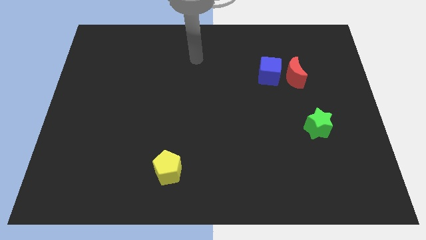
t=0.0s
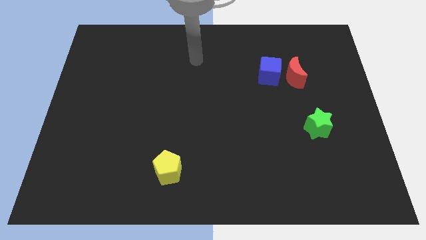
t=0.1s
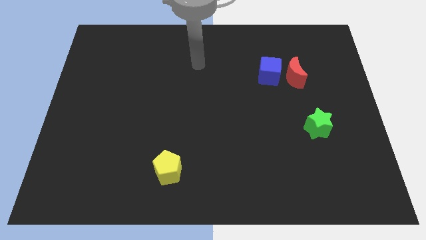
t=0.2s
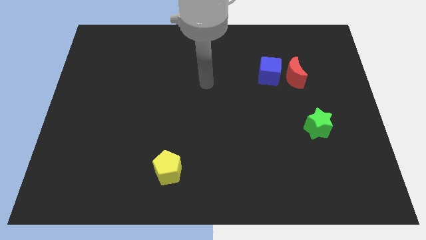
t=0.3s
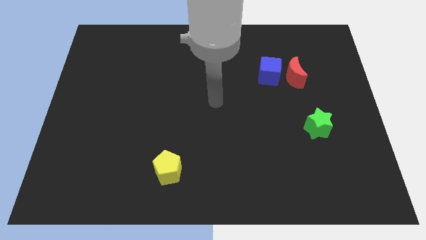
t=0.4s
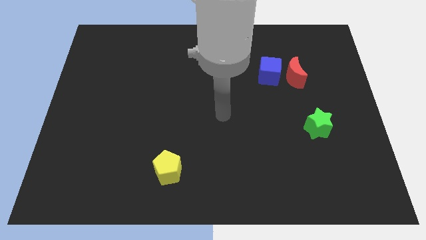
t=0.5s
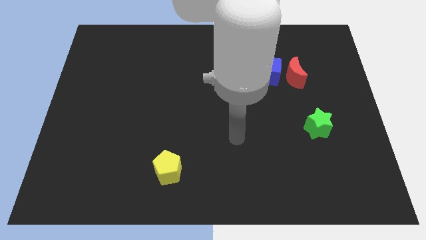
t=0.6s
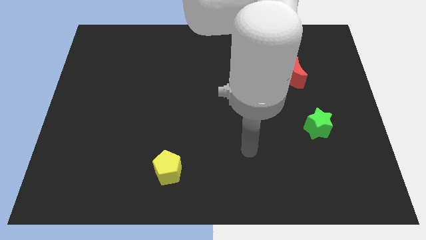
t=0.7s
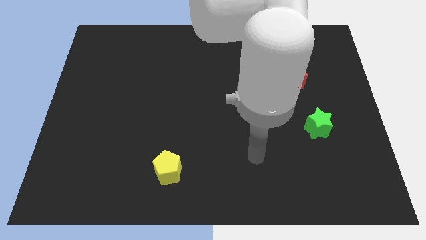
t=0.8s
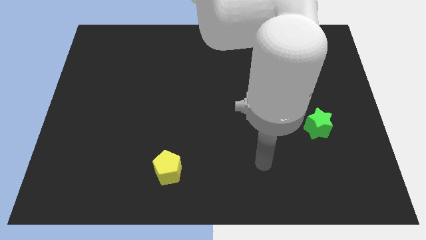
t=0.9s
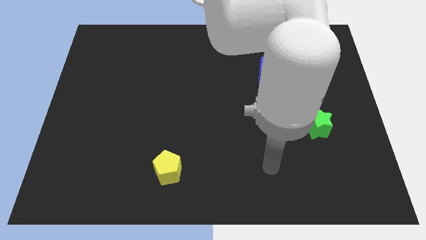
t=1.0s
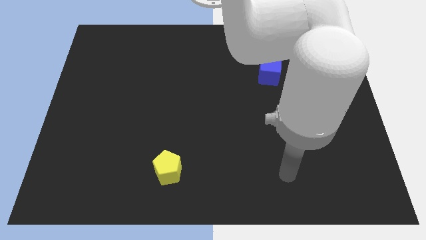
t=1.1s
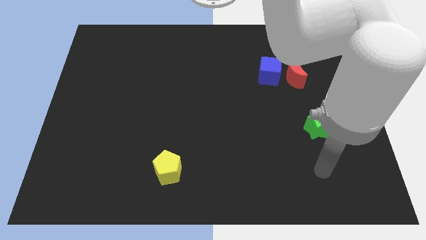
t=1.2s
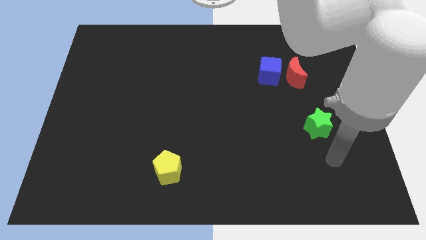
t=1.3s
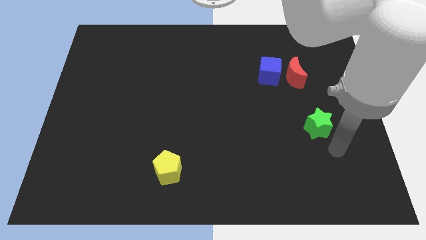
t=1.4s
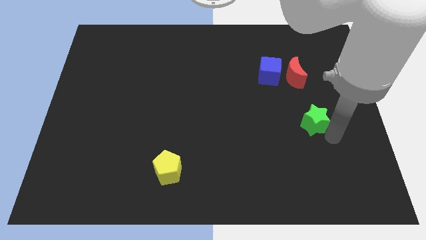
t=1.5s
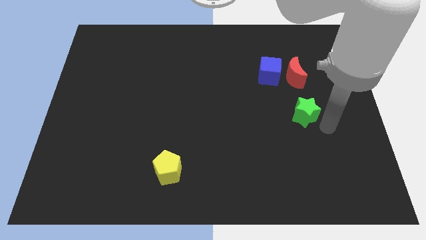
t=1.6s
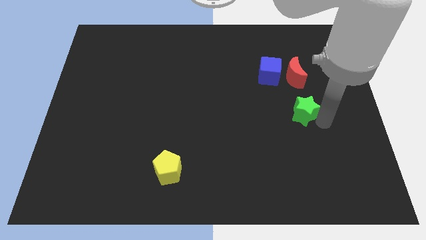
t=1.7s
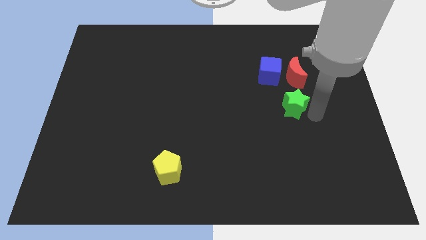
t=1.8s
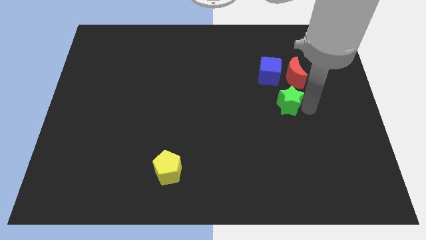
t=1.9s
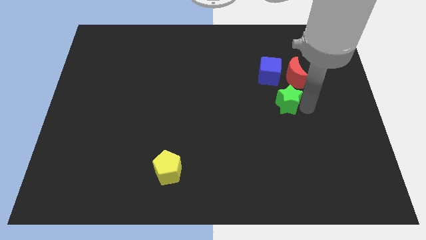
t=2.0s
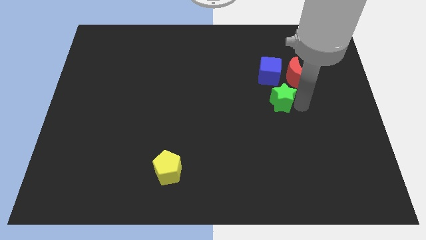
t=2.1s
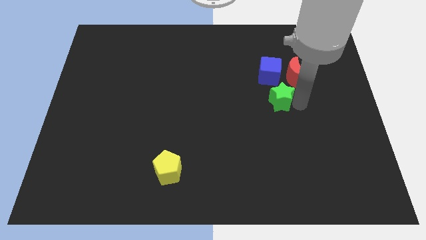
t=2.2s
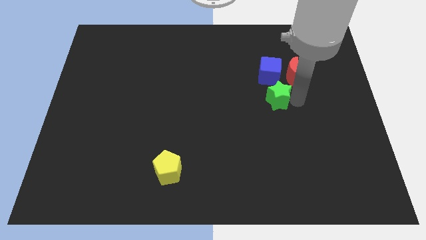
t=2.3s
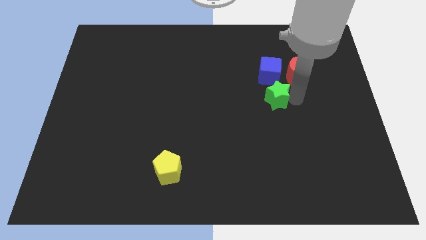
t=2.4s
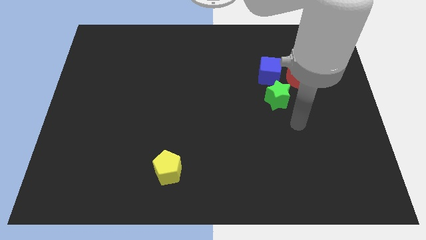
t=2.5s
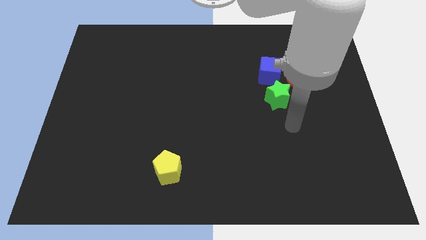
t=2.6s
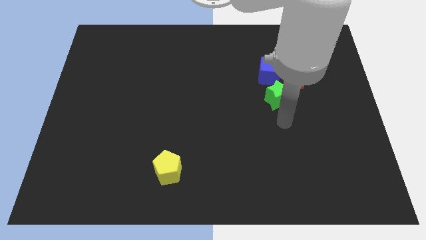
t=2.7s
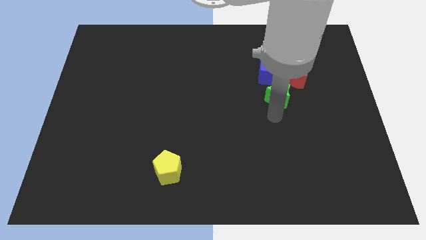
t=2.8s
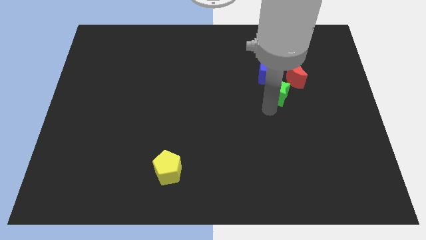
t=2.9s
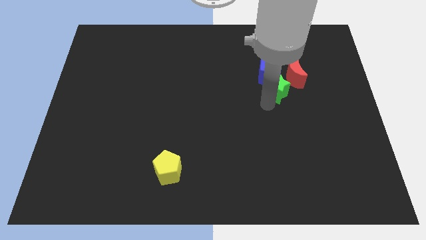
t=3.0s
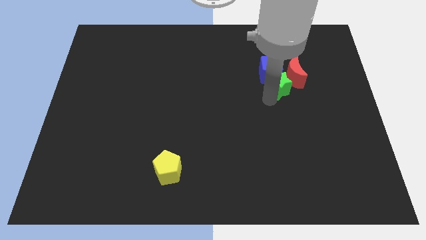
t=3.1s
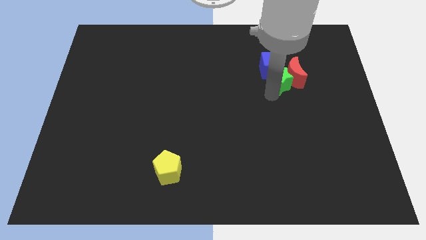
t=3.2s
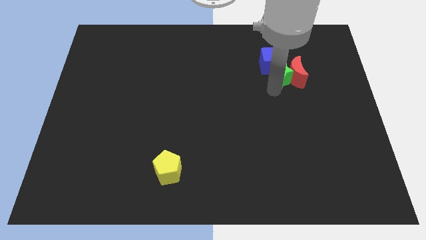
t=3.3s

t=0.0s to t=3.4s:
push the green star towards the red block

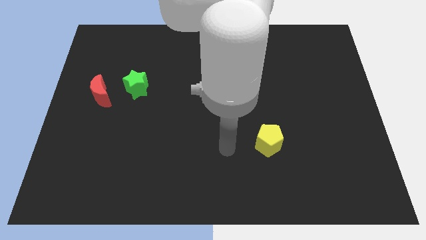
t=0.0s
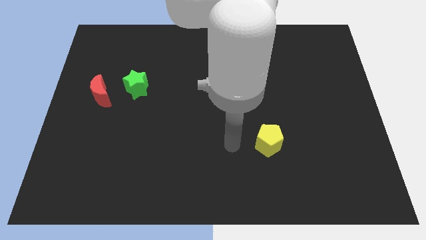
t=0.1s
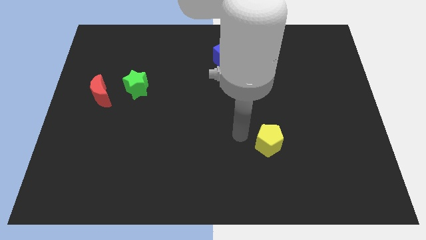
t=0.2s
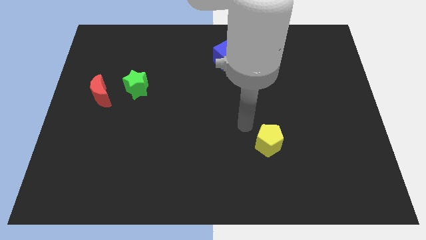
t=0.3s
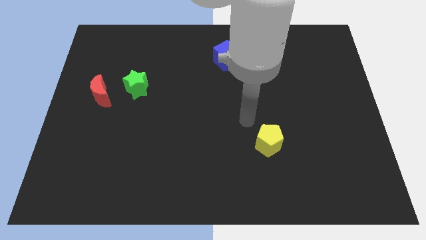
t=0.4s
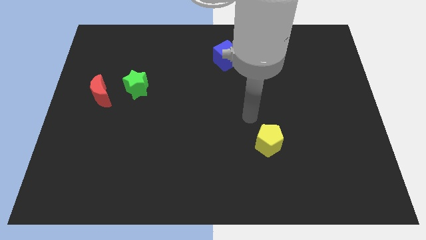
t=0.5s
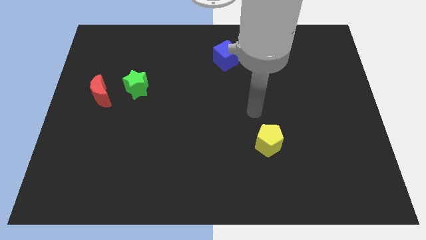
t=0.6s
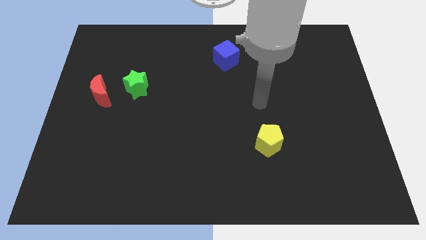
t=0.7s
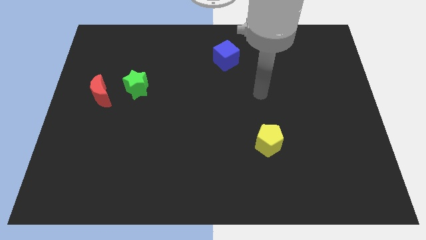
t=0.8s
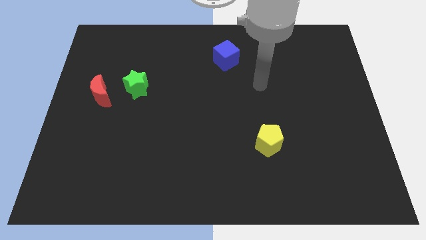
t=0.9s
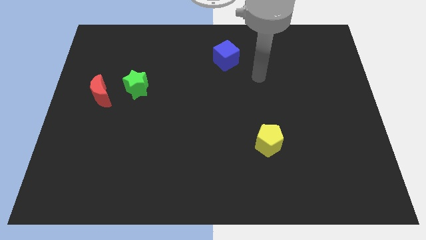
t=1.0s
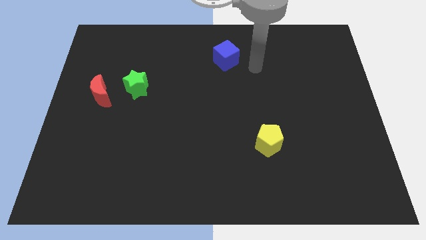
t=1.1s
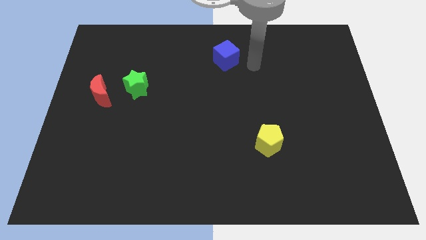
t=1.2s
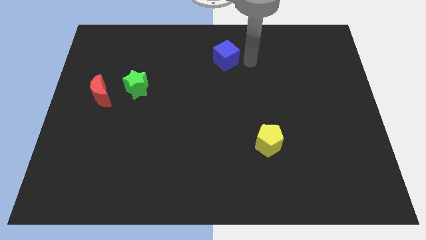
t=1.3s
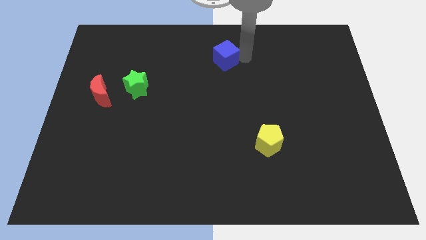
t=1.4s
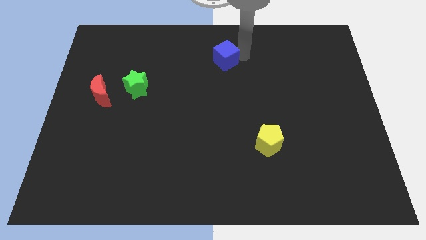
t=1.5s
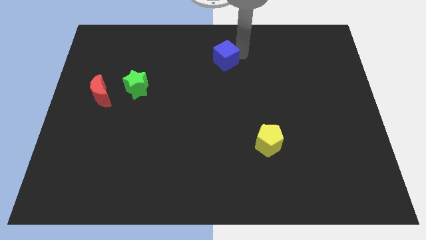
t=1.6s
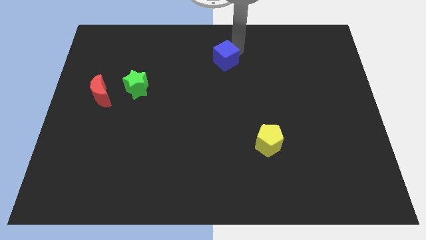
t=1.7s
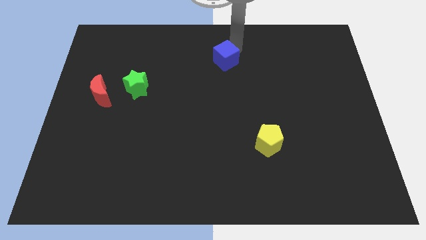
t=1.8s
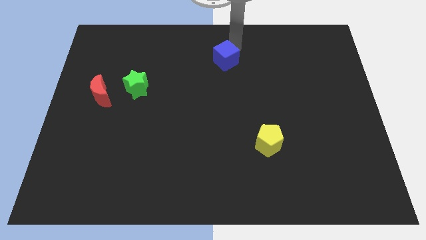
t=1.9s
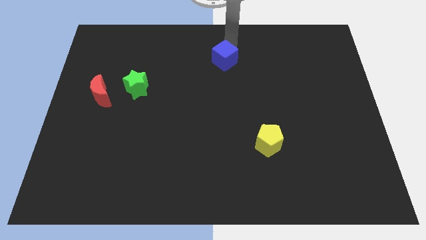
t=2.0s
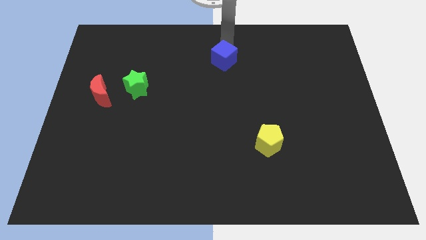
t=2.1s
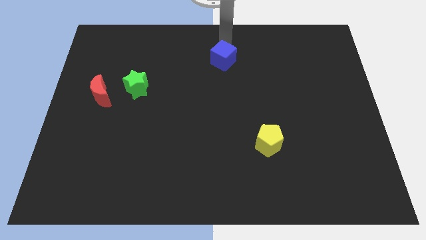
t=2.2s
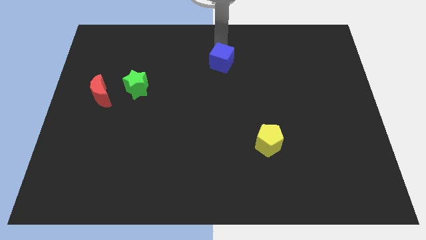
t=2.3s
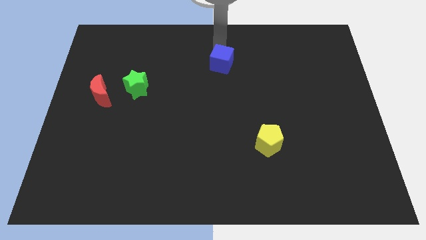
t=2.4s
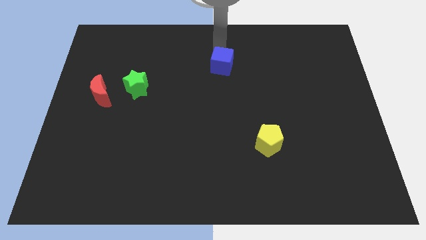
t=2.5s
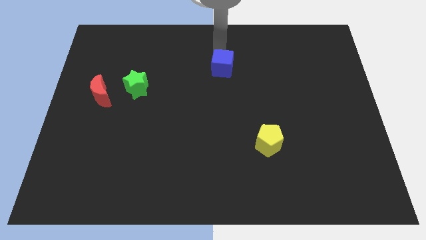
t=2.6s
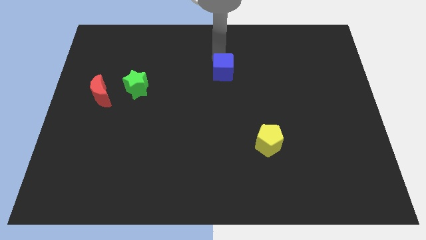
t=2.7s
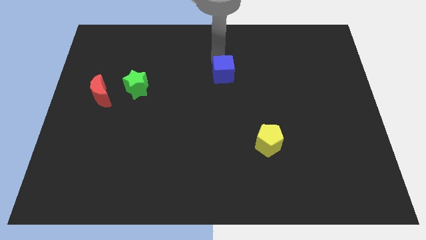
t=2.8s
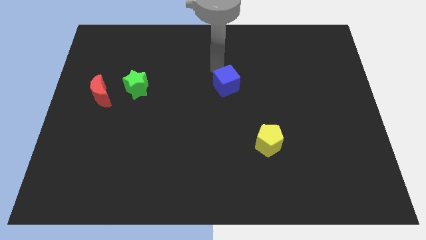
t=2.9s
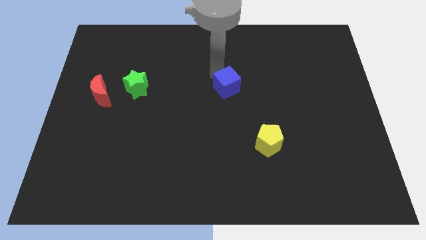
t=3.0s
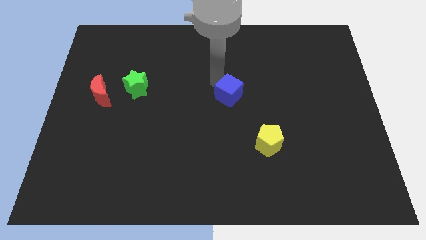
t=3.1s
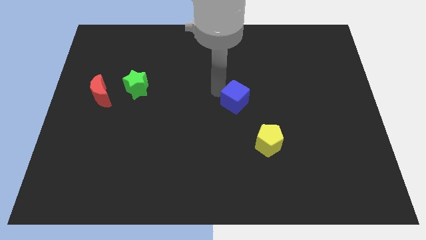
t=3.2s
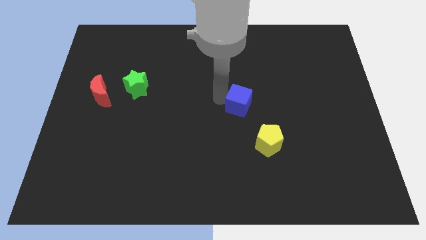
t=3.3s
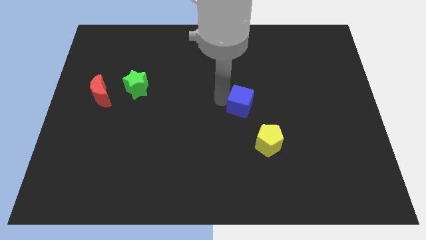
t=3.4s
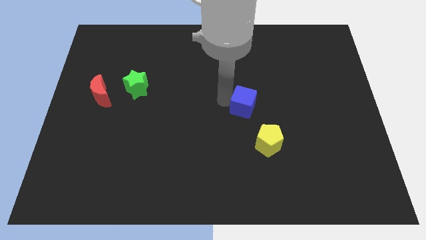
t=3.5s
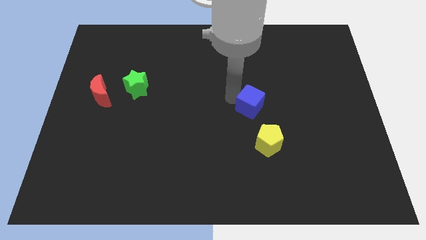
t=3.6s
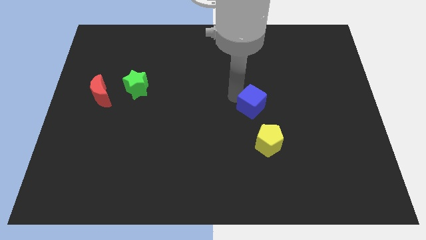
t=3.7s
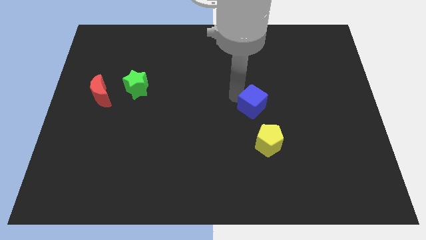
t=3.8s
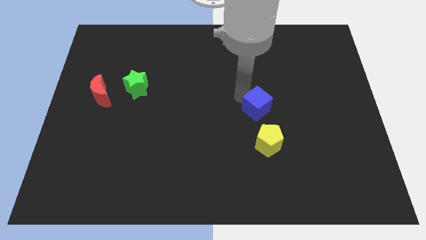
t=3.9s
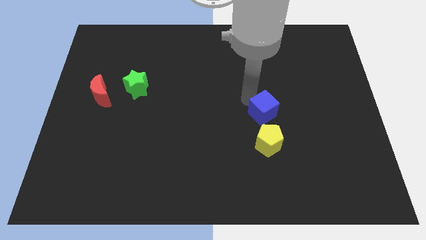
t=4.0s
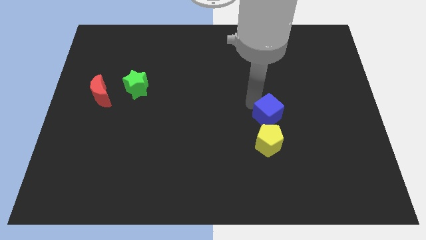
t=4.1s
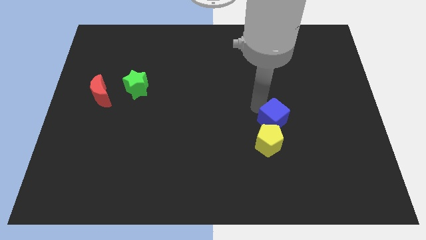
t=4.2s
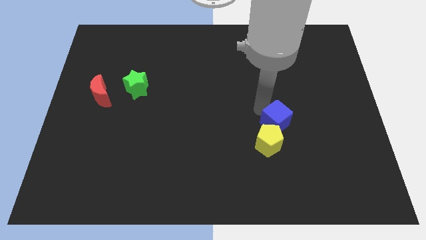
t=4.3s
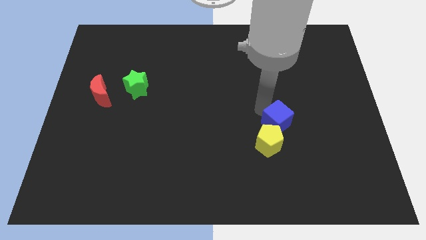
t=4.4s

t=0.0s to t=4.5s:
slide the cube to the yellow pentagon

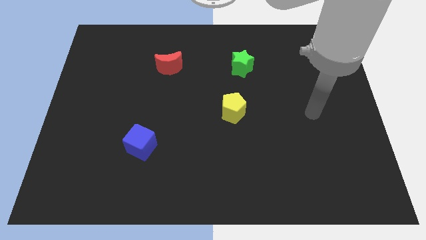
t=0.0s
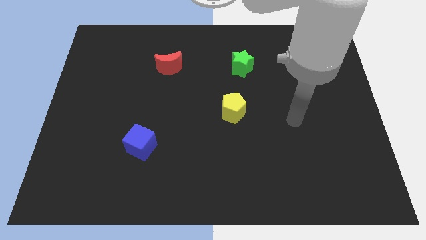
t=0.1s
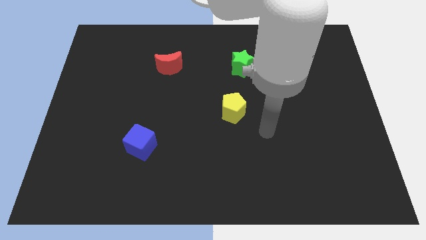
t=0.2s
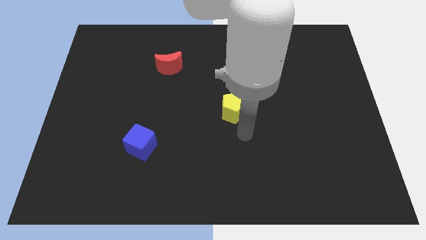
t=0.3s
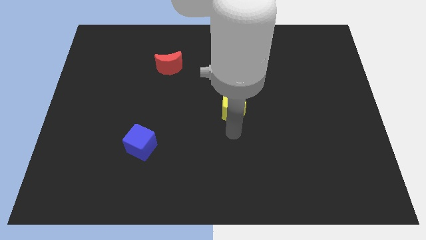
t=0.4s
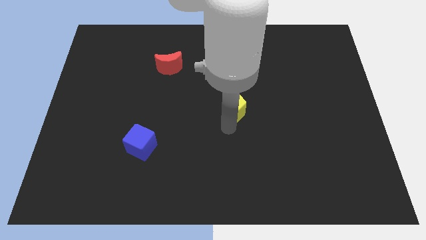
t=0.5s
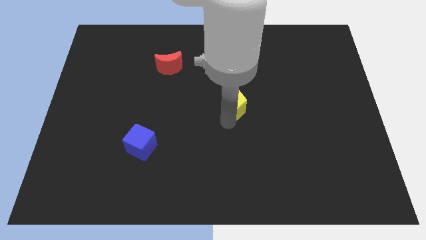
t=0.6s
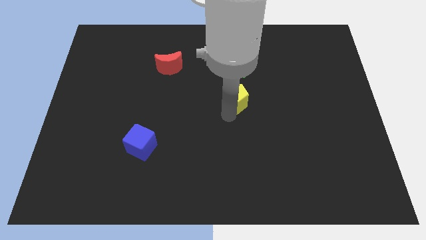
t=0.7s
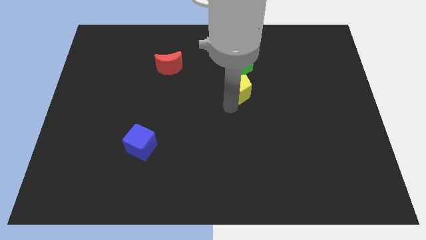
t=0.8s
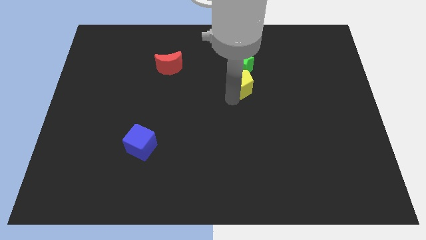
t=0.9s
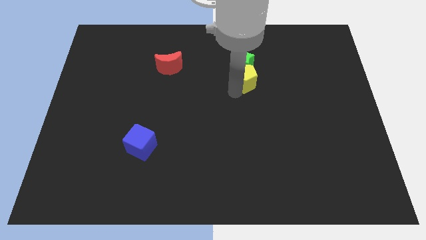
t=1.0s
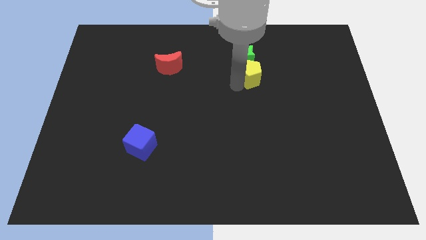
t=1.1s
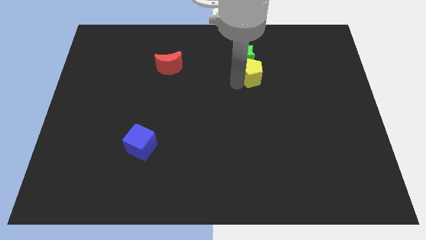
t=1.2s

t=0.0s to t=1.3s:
put the yellow pentagon next to the green star
